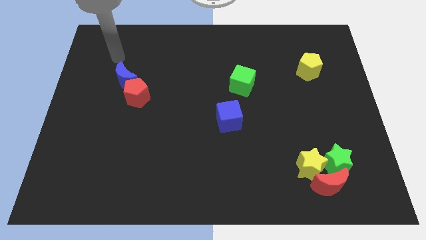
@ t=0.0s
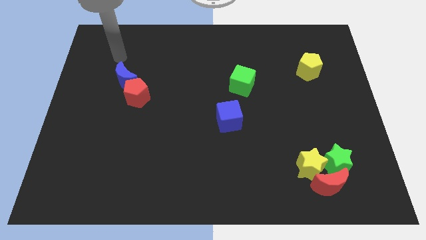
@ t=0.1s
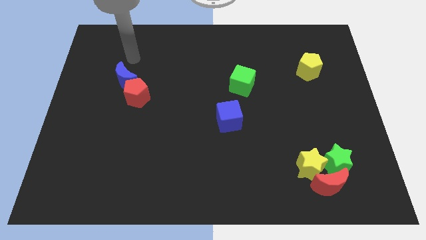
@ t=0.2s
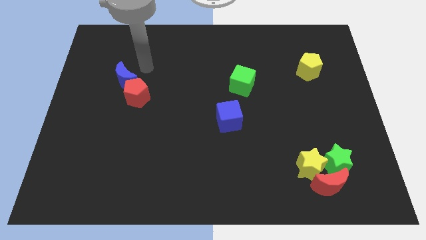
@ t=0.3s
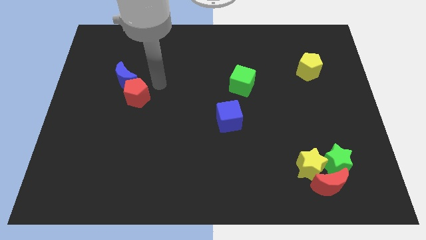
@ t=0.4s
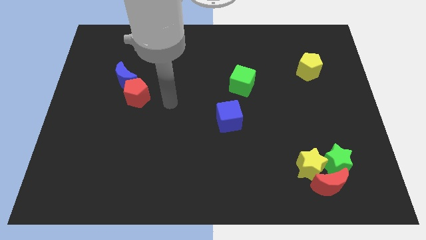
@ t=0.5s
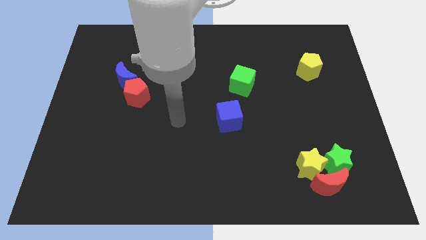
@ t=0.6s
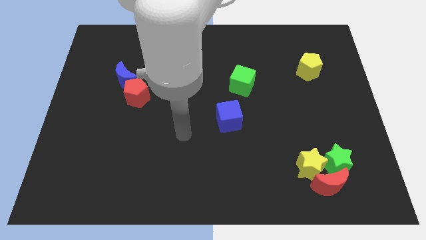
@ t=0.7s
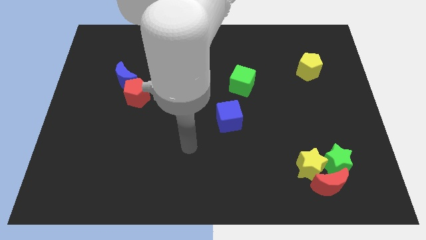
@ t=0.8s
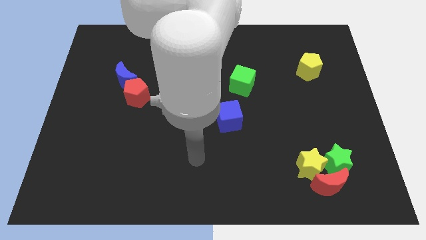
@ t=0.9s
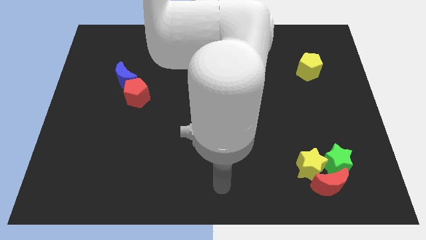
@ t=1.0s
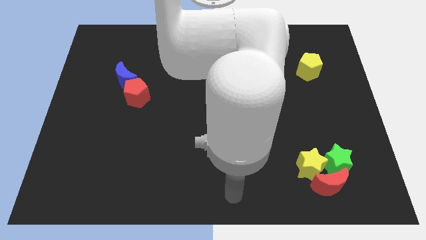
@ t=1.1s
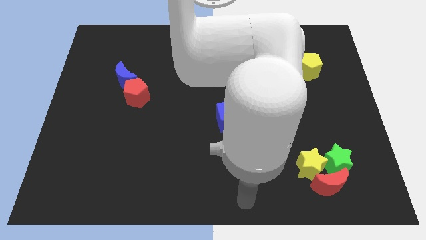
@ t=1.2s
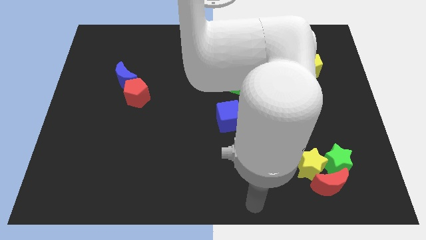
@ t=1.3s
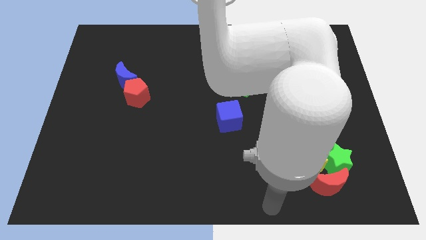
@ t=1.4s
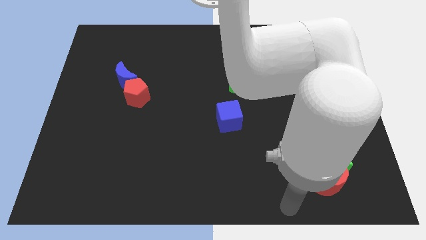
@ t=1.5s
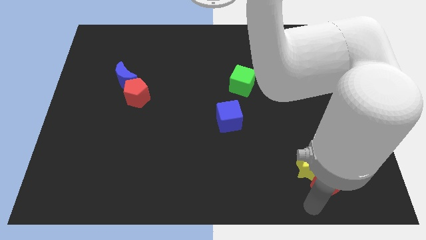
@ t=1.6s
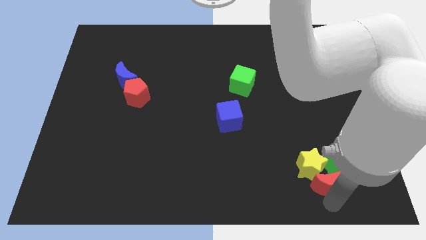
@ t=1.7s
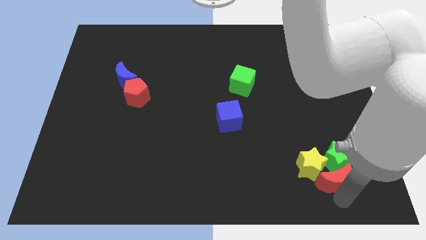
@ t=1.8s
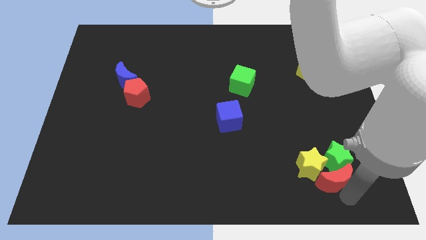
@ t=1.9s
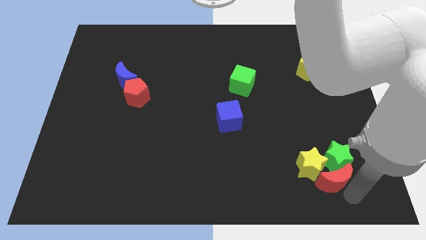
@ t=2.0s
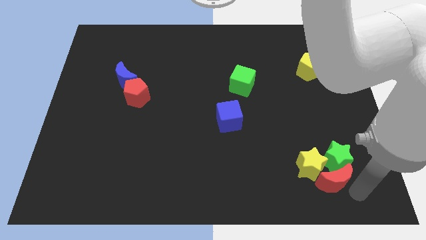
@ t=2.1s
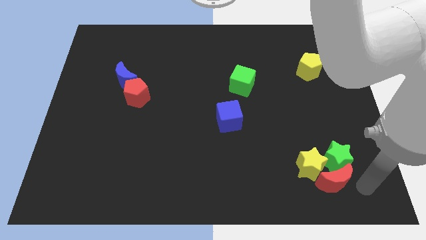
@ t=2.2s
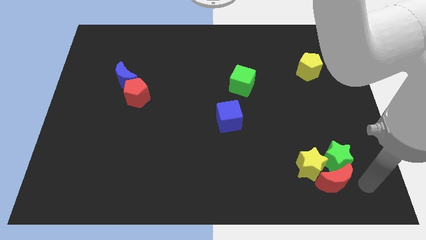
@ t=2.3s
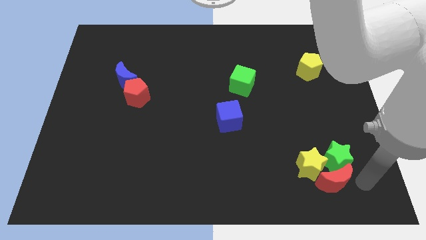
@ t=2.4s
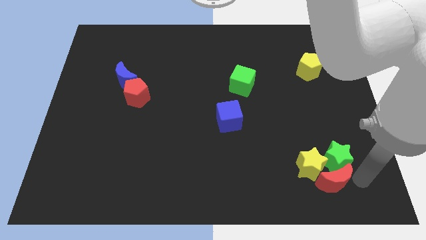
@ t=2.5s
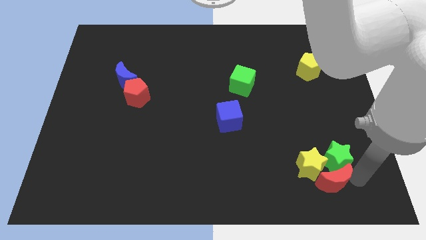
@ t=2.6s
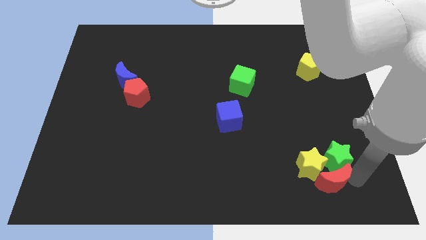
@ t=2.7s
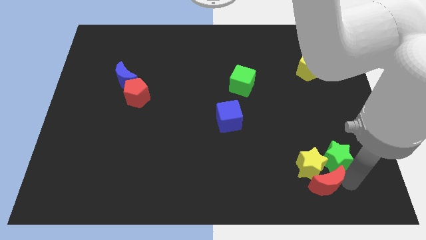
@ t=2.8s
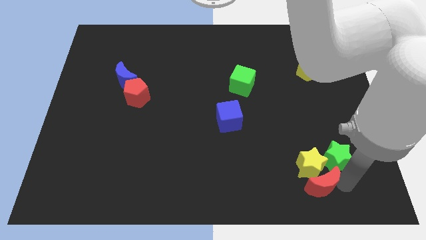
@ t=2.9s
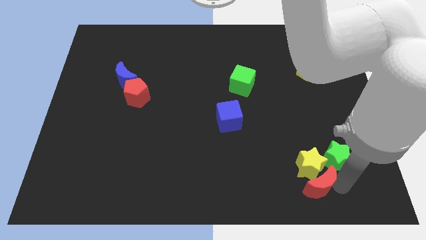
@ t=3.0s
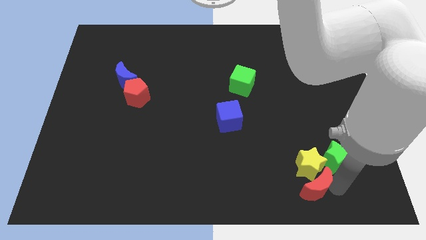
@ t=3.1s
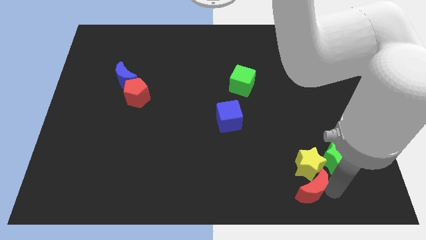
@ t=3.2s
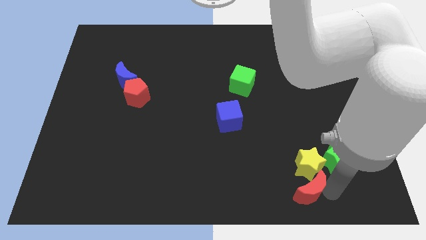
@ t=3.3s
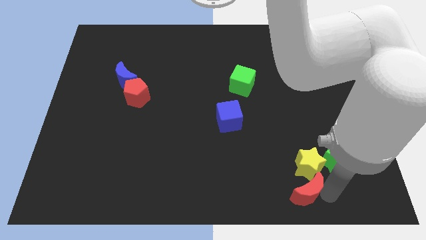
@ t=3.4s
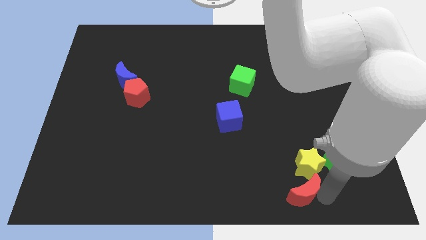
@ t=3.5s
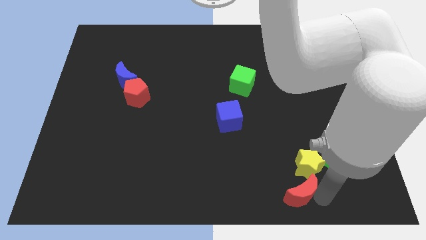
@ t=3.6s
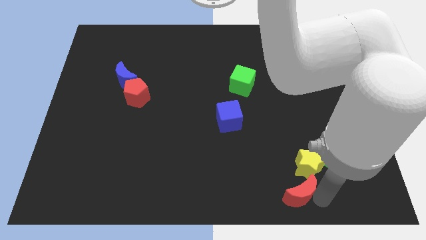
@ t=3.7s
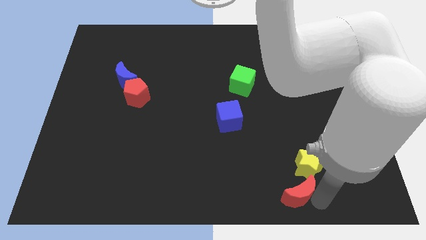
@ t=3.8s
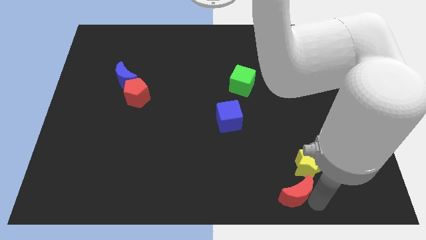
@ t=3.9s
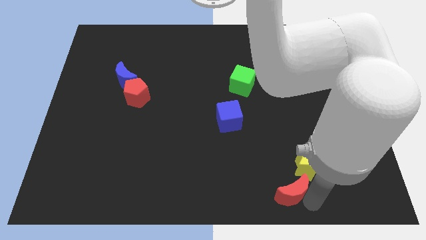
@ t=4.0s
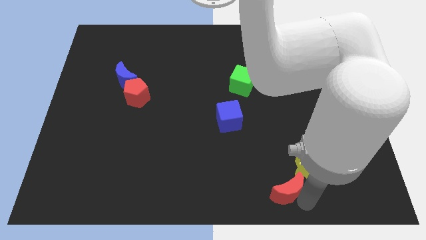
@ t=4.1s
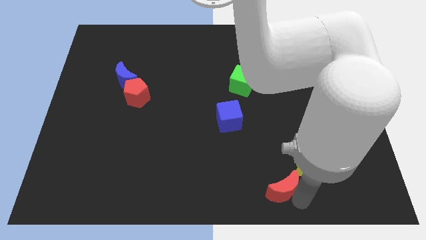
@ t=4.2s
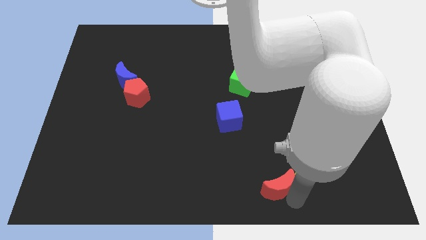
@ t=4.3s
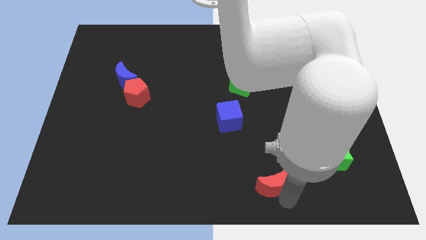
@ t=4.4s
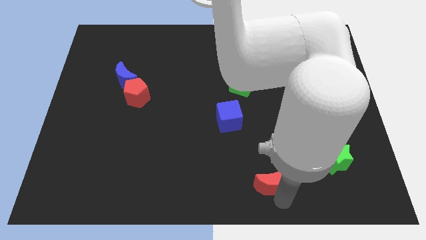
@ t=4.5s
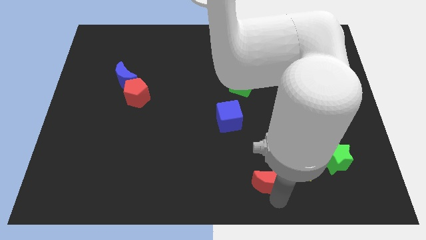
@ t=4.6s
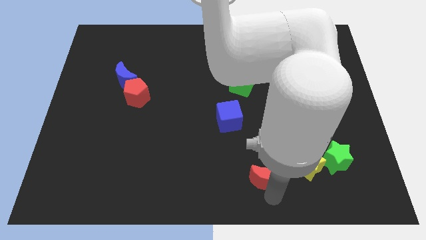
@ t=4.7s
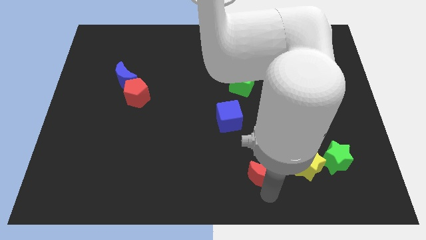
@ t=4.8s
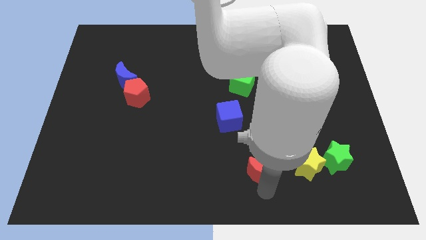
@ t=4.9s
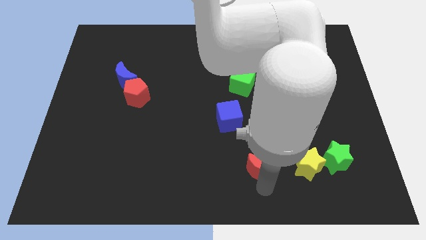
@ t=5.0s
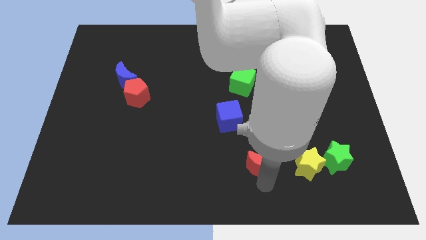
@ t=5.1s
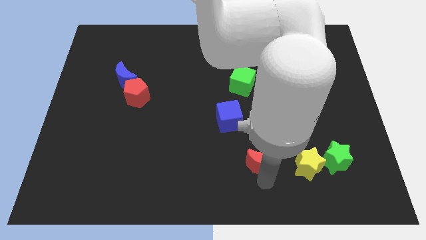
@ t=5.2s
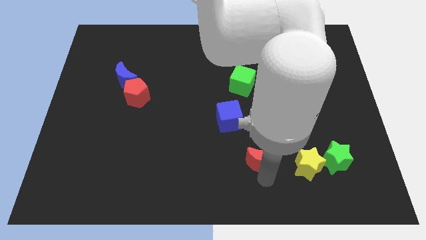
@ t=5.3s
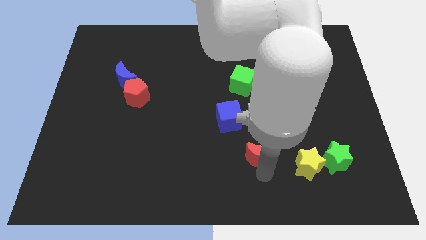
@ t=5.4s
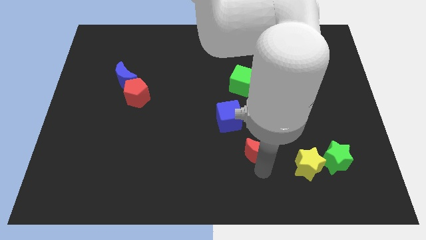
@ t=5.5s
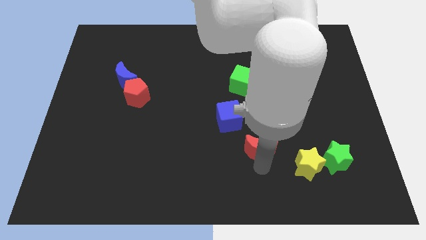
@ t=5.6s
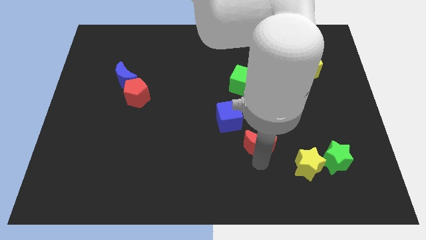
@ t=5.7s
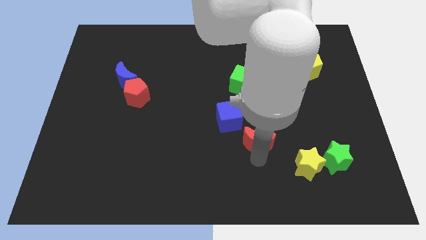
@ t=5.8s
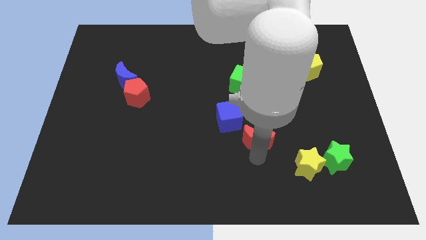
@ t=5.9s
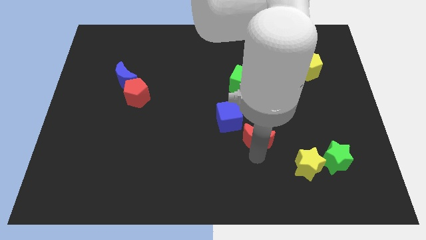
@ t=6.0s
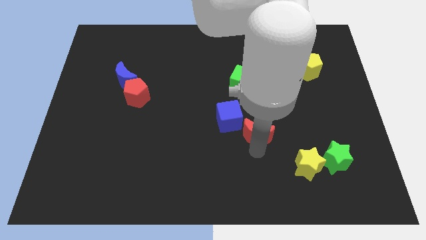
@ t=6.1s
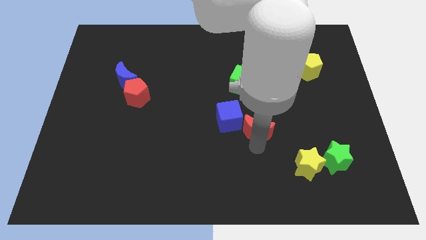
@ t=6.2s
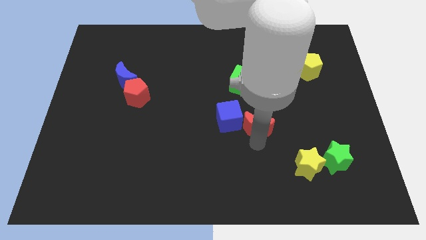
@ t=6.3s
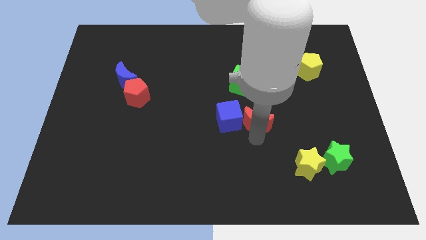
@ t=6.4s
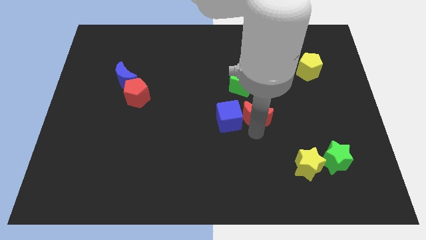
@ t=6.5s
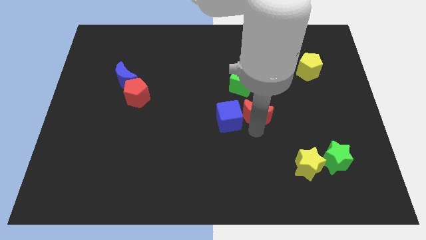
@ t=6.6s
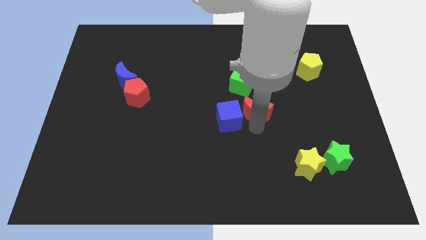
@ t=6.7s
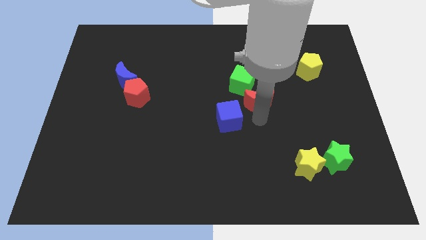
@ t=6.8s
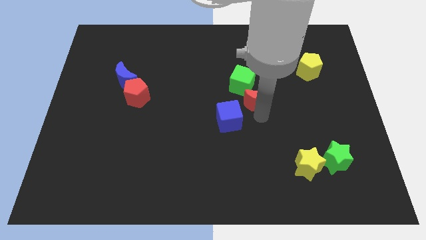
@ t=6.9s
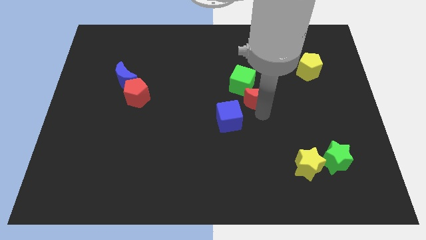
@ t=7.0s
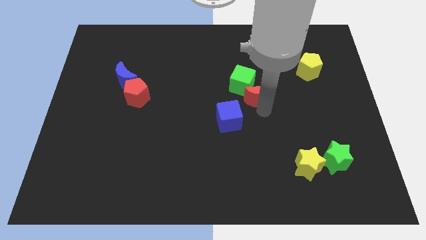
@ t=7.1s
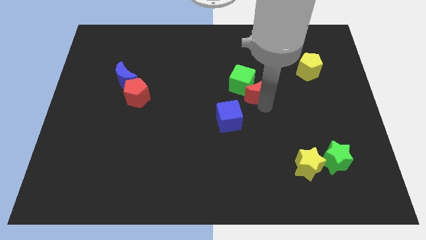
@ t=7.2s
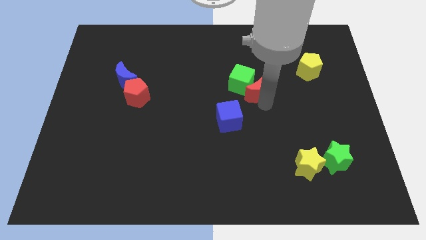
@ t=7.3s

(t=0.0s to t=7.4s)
slide the red moon close to the green cube

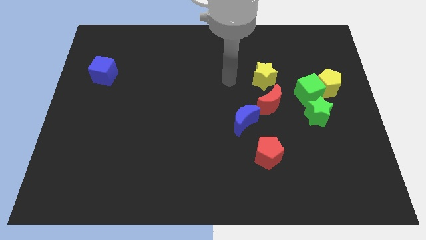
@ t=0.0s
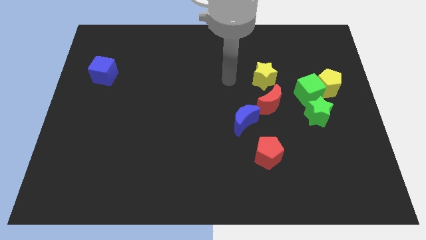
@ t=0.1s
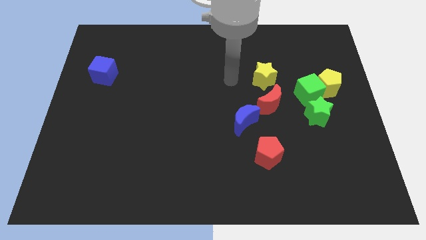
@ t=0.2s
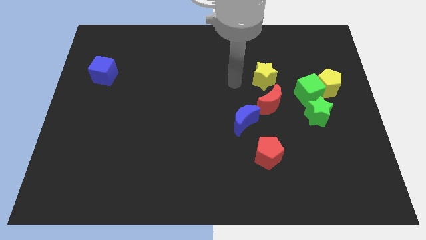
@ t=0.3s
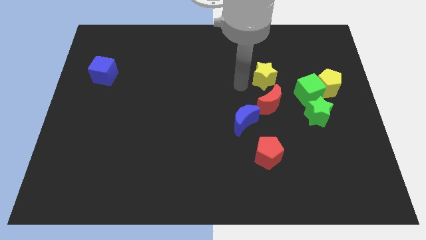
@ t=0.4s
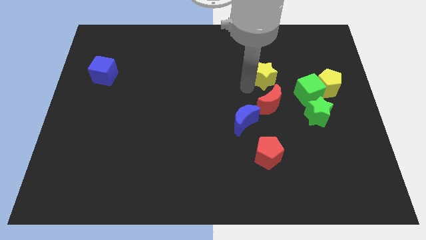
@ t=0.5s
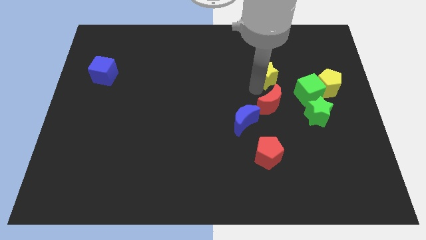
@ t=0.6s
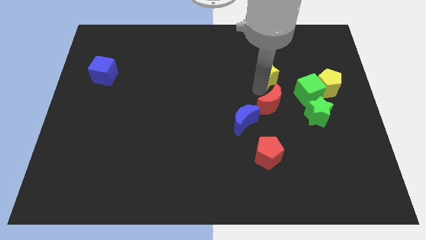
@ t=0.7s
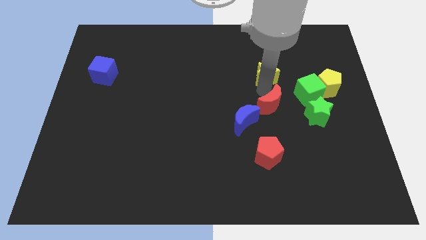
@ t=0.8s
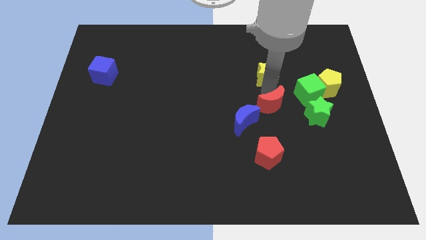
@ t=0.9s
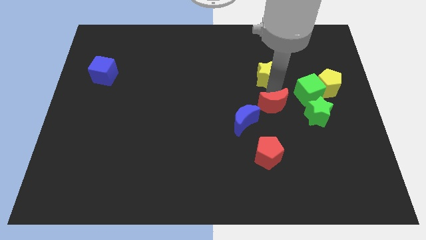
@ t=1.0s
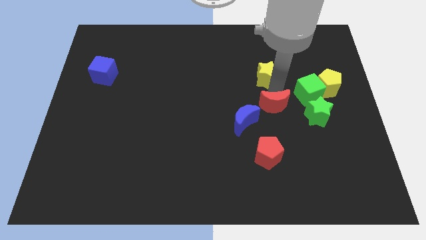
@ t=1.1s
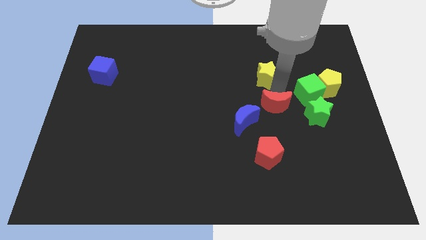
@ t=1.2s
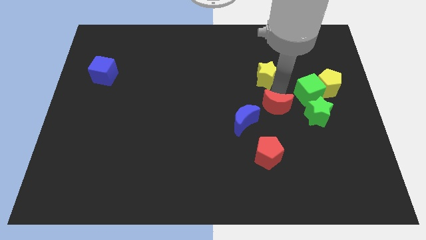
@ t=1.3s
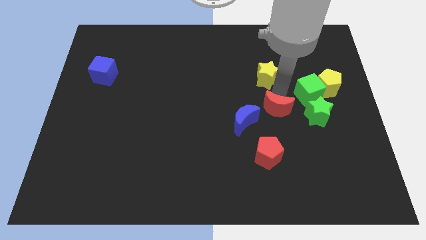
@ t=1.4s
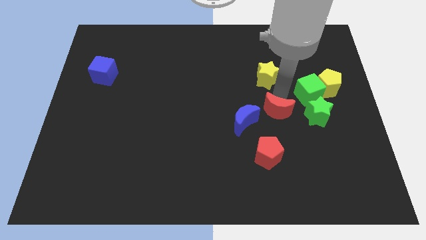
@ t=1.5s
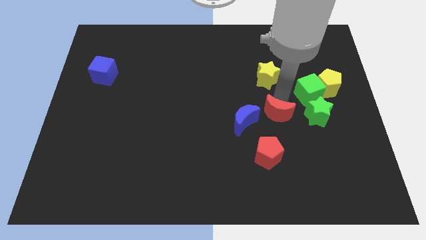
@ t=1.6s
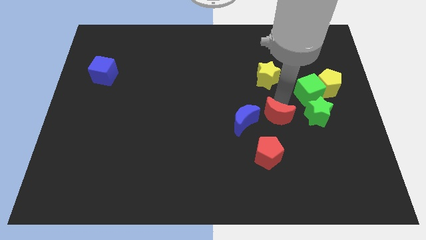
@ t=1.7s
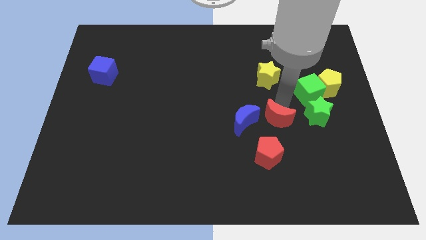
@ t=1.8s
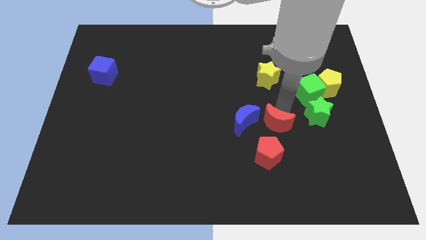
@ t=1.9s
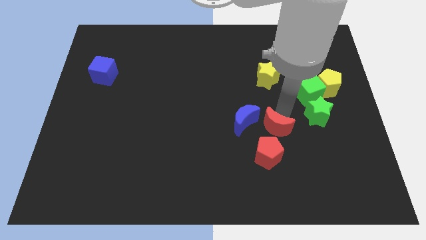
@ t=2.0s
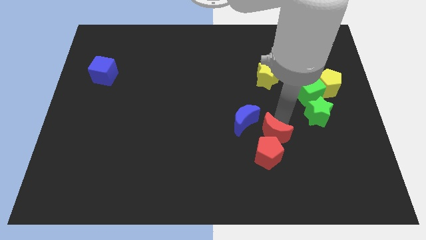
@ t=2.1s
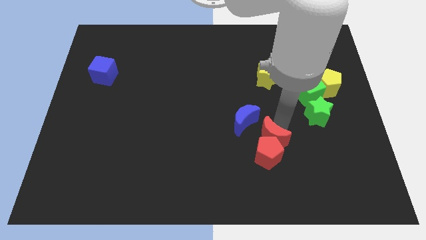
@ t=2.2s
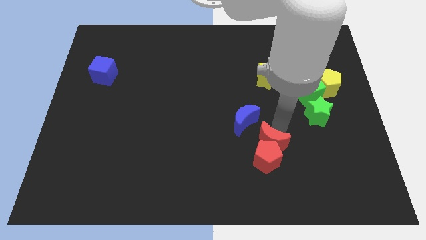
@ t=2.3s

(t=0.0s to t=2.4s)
push the red moon towards the red pentagon
